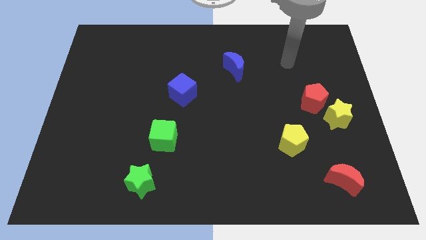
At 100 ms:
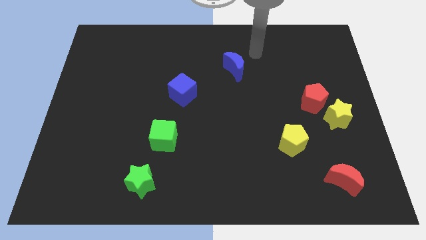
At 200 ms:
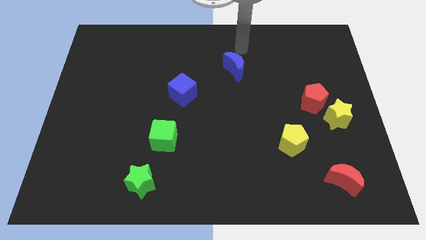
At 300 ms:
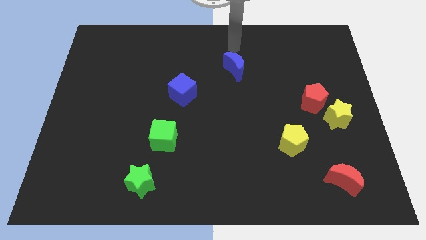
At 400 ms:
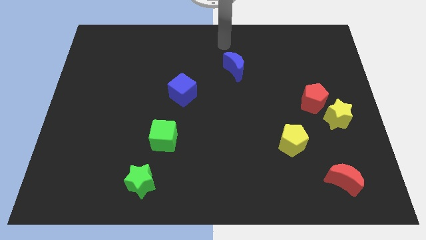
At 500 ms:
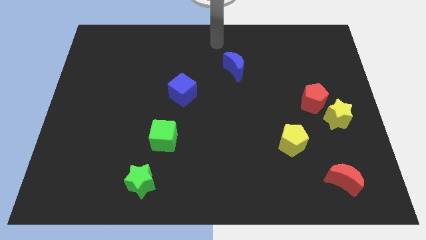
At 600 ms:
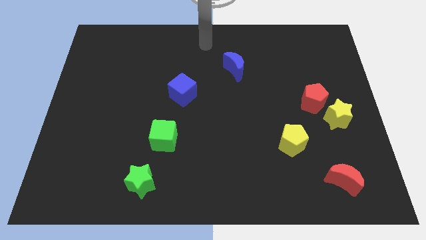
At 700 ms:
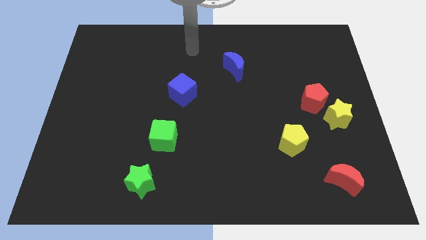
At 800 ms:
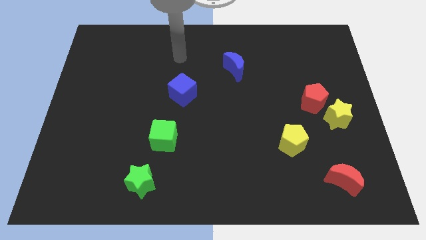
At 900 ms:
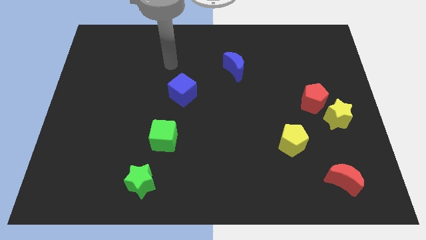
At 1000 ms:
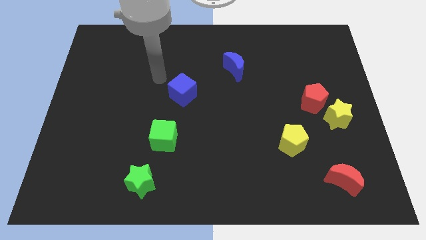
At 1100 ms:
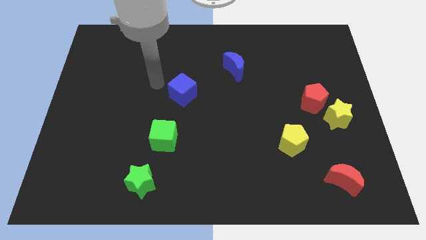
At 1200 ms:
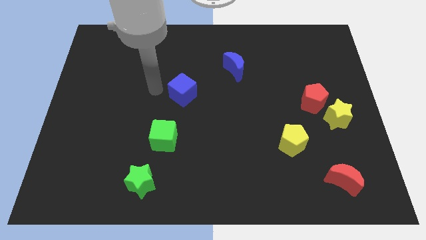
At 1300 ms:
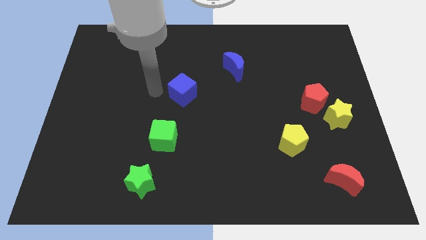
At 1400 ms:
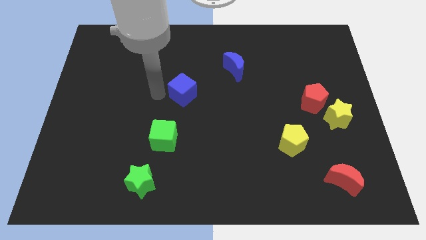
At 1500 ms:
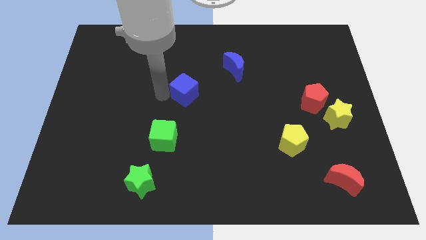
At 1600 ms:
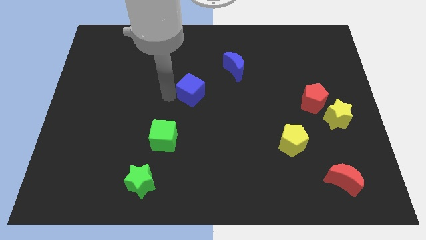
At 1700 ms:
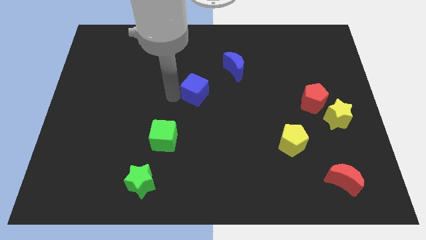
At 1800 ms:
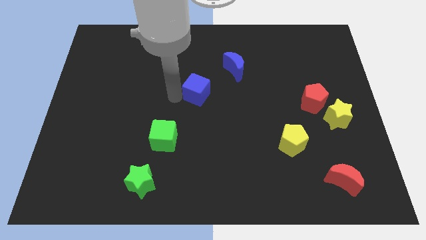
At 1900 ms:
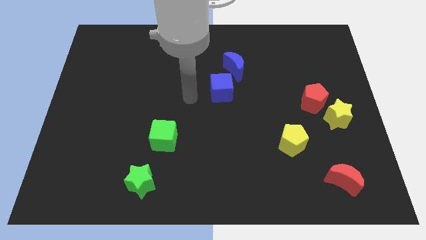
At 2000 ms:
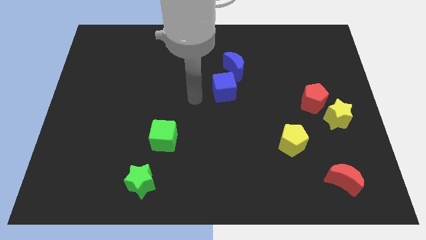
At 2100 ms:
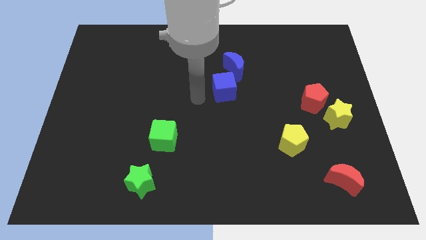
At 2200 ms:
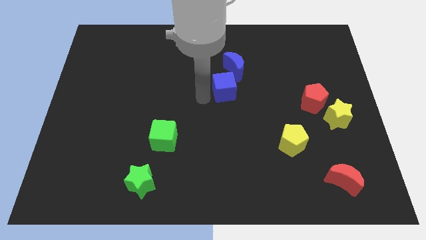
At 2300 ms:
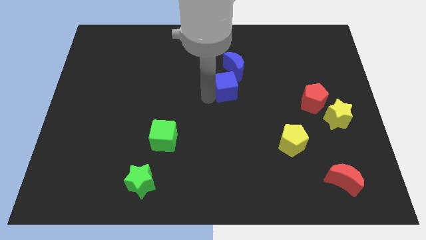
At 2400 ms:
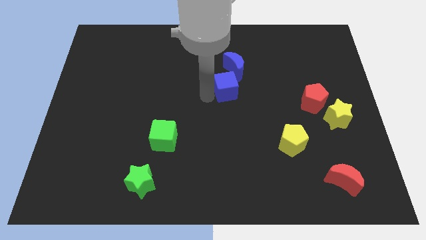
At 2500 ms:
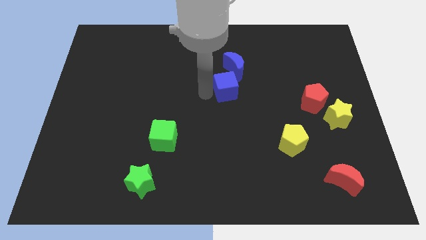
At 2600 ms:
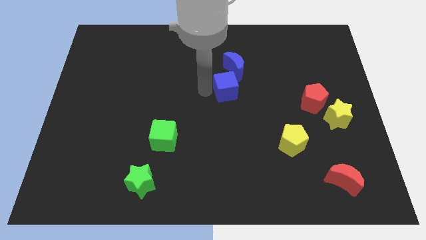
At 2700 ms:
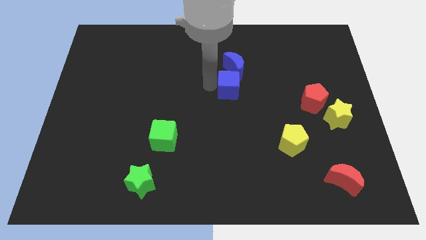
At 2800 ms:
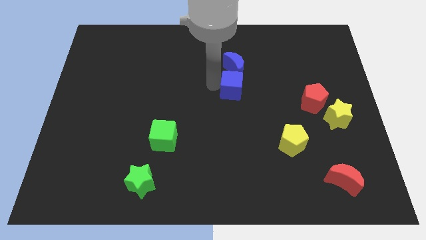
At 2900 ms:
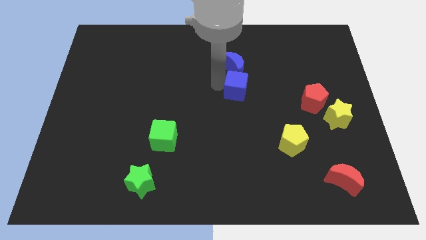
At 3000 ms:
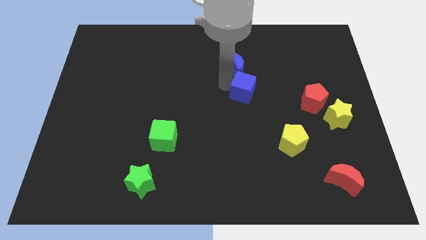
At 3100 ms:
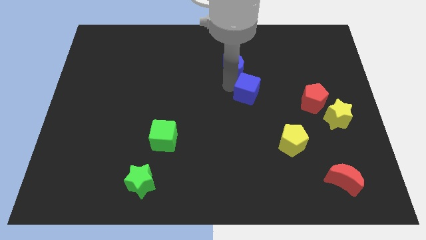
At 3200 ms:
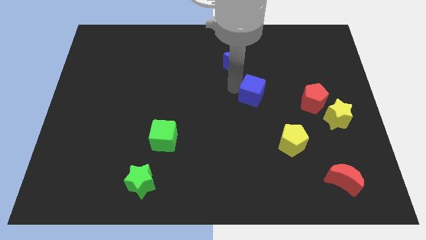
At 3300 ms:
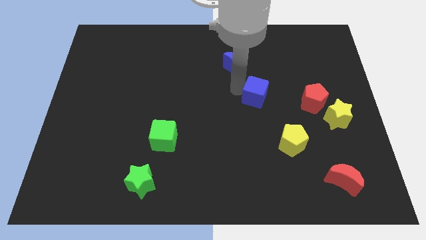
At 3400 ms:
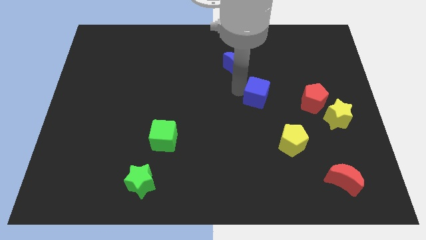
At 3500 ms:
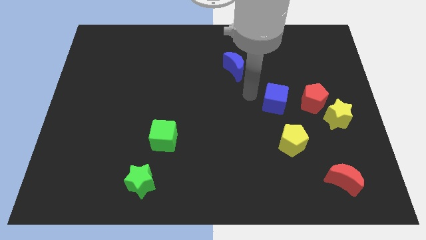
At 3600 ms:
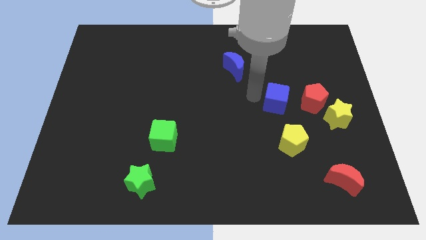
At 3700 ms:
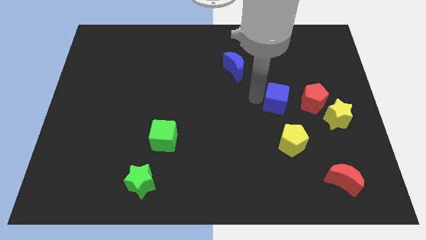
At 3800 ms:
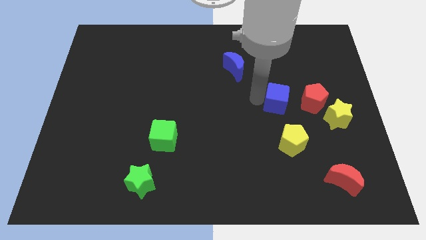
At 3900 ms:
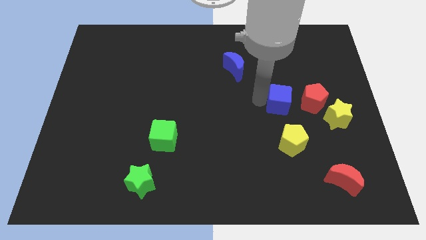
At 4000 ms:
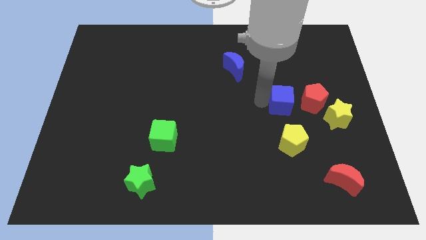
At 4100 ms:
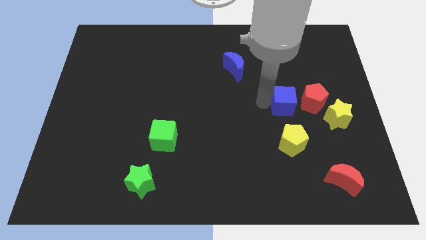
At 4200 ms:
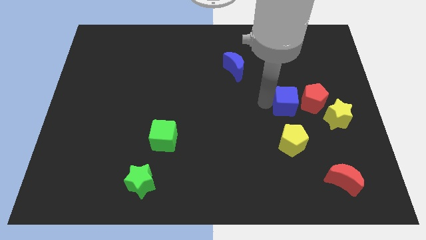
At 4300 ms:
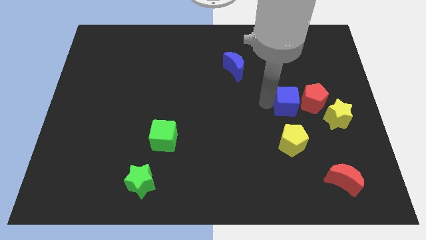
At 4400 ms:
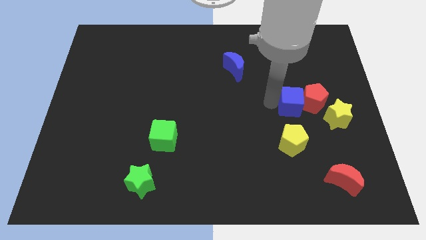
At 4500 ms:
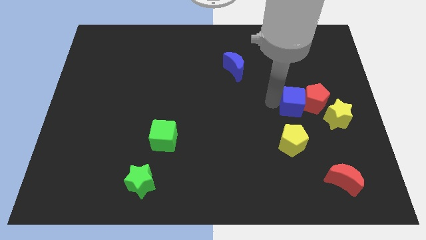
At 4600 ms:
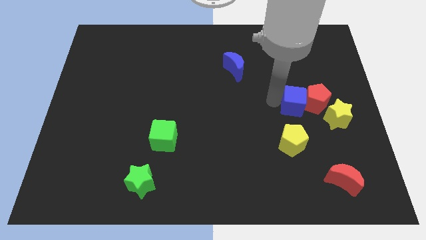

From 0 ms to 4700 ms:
slide the blue cube towards the red pentagon

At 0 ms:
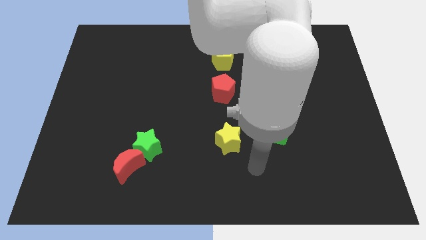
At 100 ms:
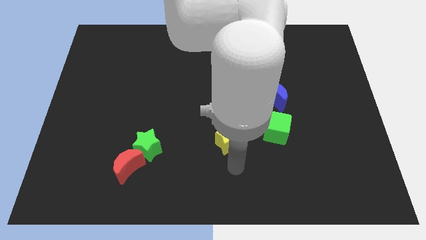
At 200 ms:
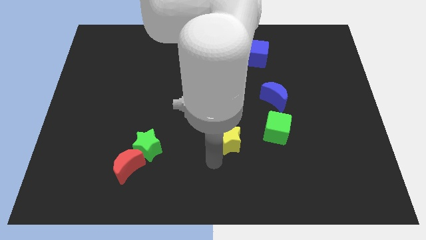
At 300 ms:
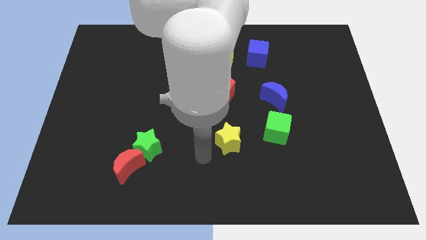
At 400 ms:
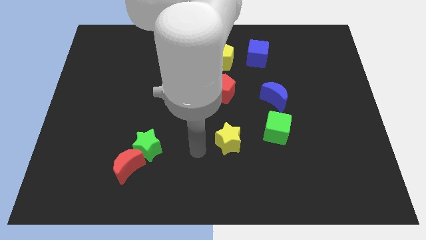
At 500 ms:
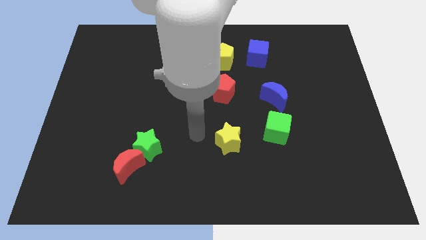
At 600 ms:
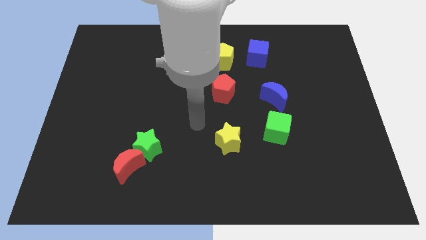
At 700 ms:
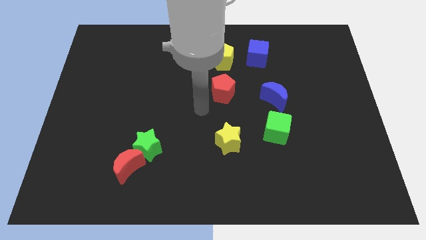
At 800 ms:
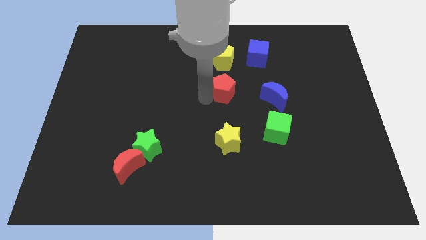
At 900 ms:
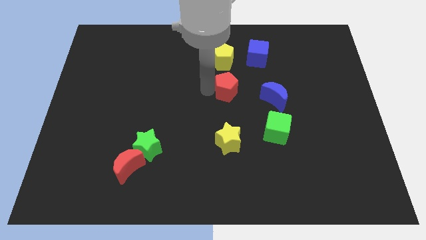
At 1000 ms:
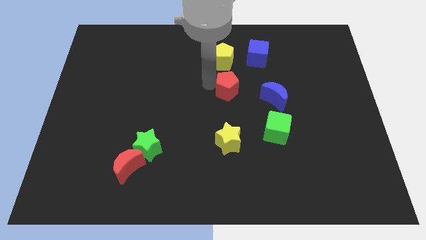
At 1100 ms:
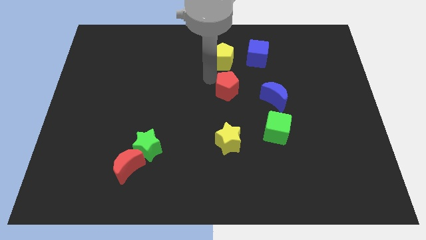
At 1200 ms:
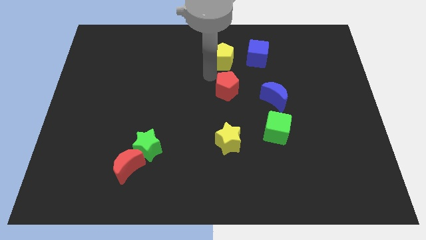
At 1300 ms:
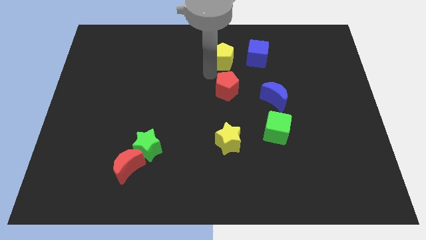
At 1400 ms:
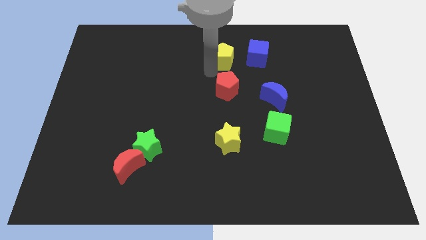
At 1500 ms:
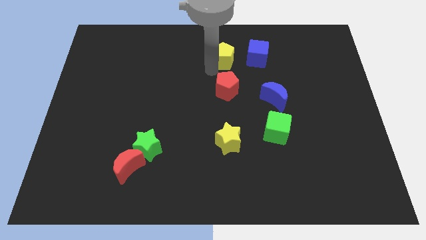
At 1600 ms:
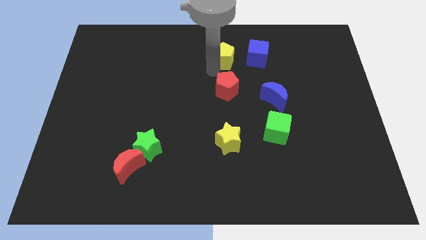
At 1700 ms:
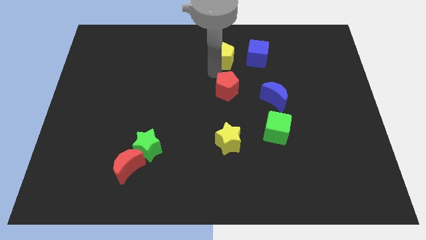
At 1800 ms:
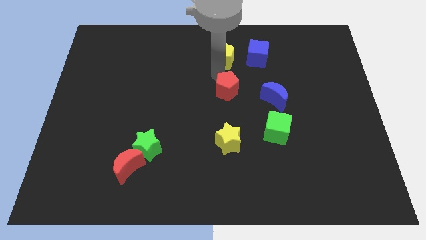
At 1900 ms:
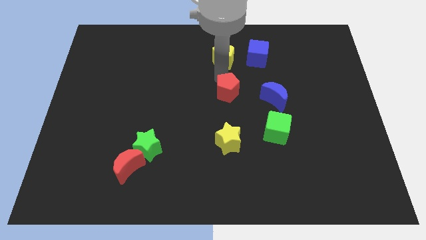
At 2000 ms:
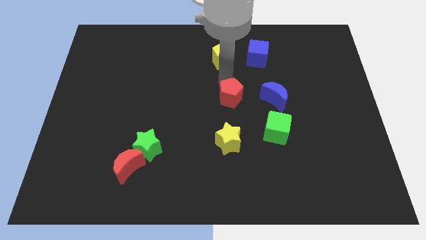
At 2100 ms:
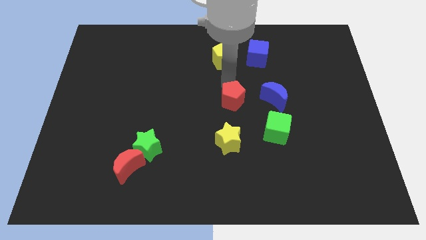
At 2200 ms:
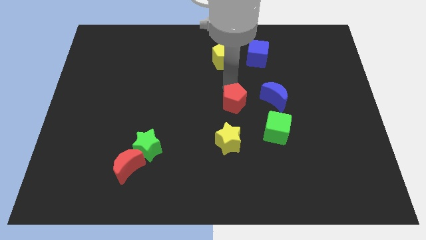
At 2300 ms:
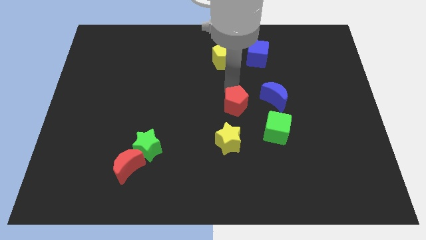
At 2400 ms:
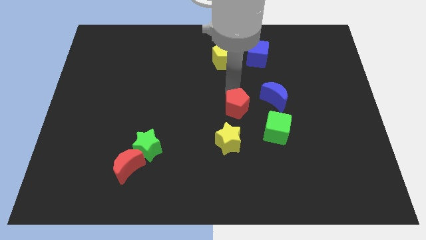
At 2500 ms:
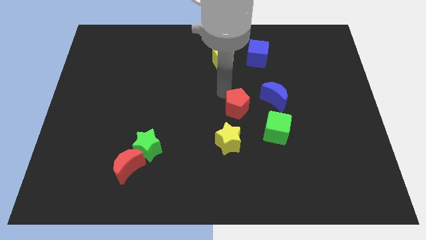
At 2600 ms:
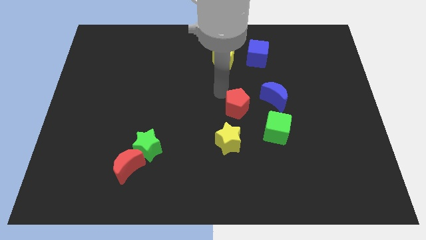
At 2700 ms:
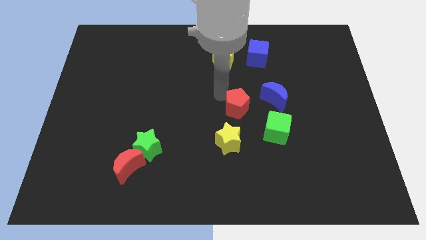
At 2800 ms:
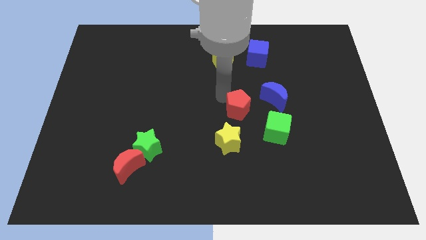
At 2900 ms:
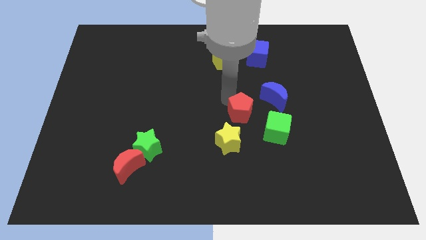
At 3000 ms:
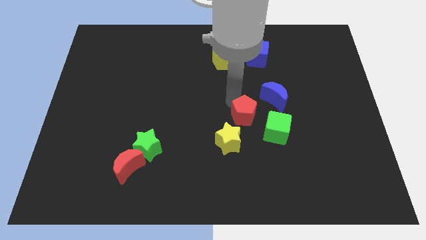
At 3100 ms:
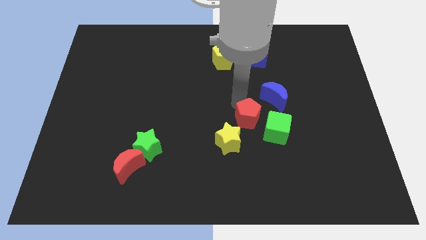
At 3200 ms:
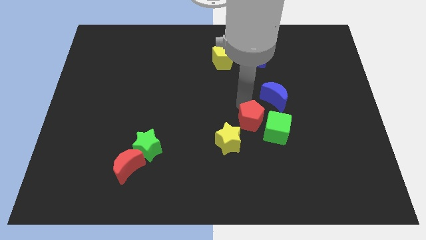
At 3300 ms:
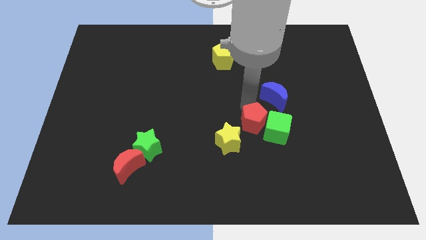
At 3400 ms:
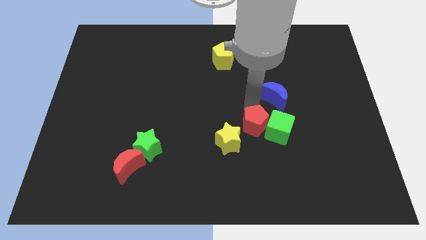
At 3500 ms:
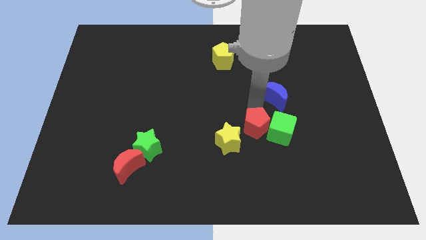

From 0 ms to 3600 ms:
move the red pentagon to the green cube

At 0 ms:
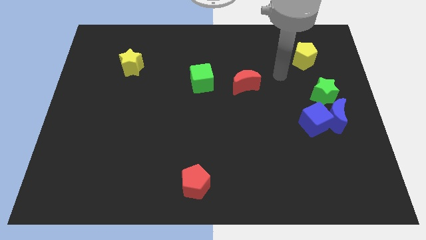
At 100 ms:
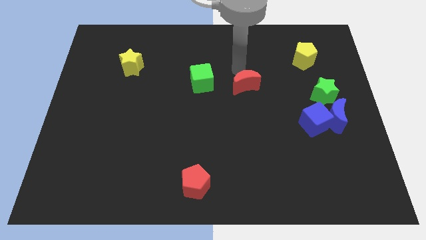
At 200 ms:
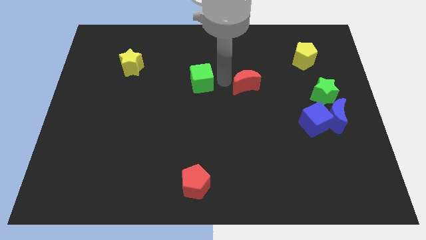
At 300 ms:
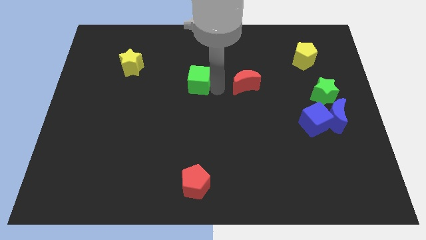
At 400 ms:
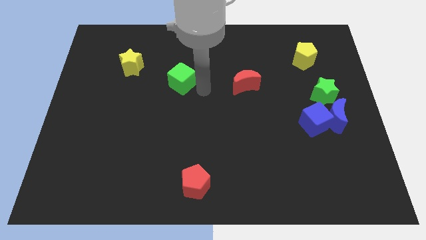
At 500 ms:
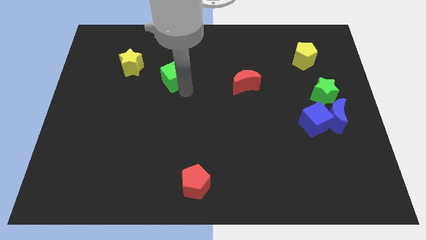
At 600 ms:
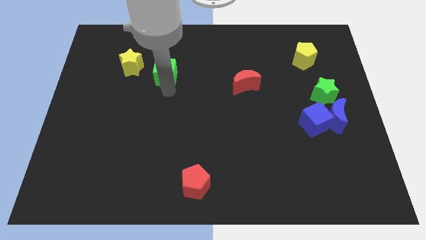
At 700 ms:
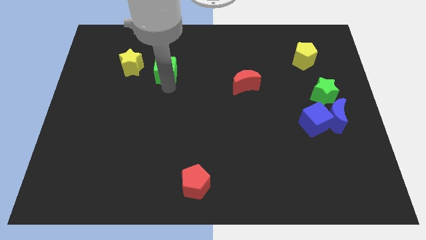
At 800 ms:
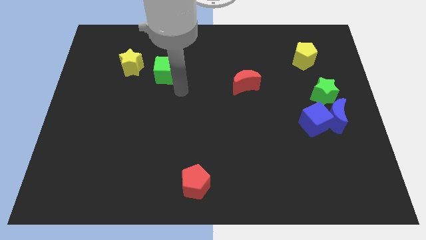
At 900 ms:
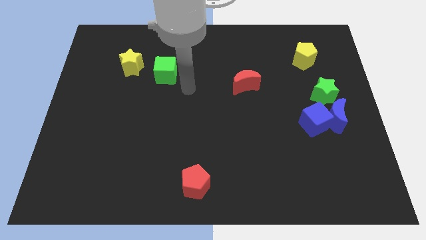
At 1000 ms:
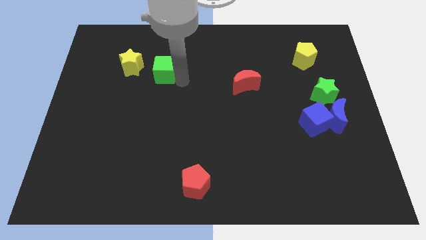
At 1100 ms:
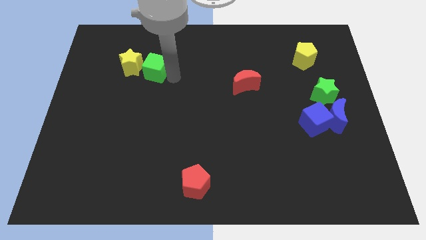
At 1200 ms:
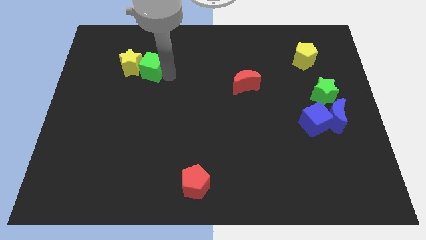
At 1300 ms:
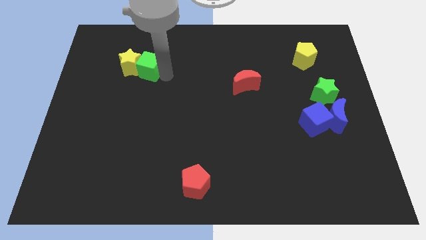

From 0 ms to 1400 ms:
put the green cube close to the yellow star
